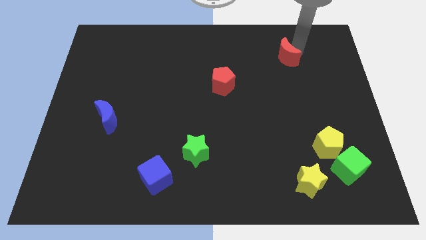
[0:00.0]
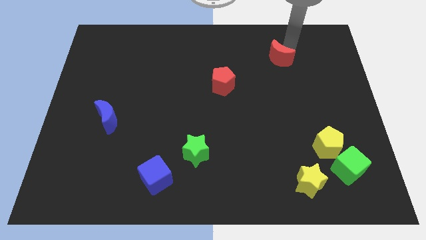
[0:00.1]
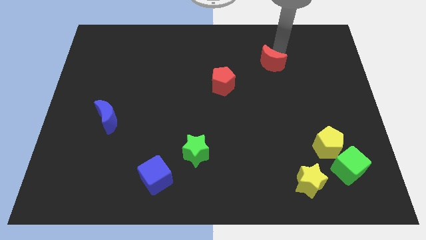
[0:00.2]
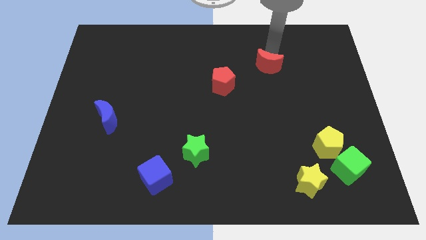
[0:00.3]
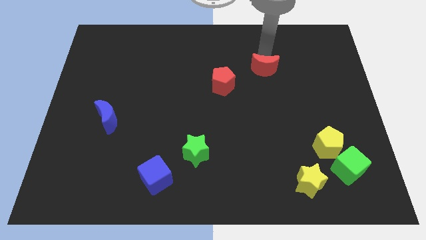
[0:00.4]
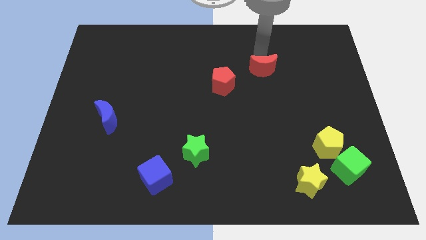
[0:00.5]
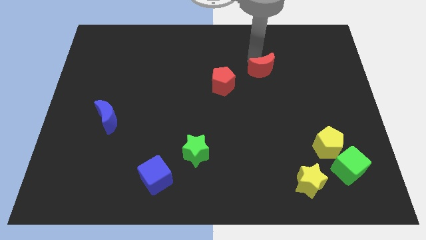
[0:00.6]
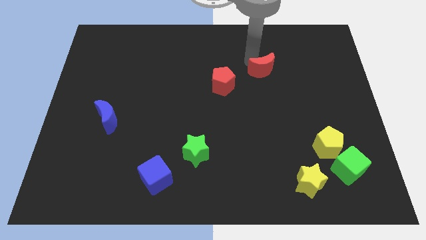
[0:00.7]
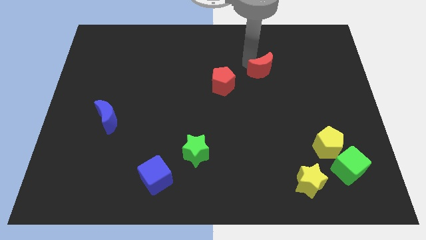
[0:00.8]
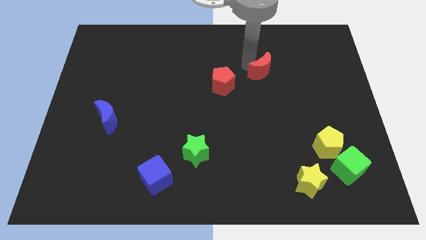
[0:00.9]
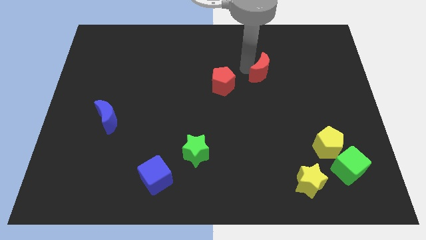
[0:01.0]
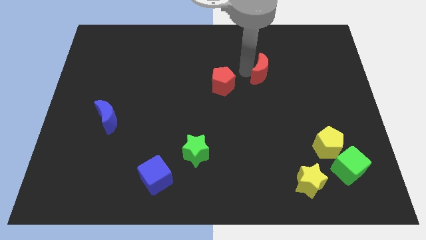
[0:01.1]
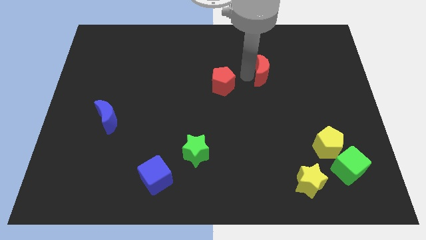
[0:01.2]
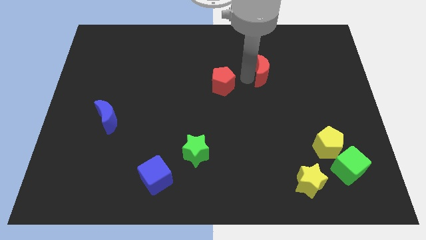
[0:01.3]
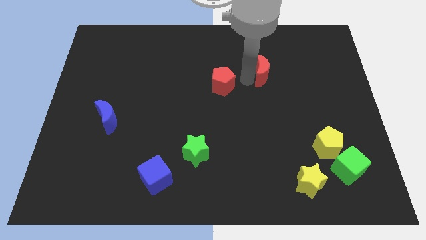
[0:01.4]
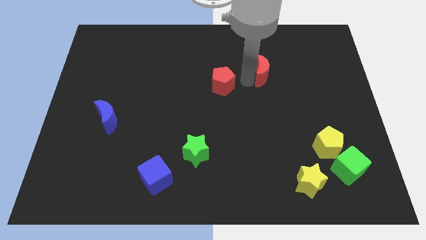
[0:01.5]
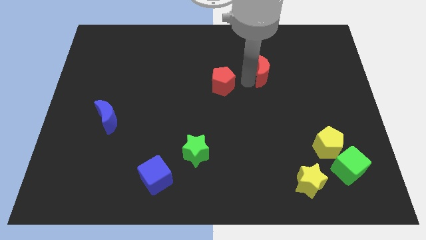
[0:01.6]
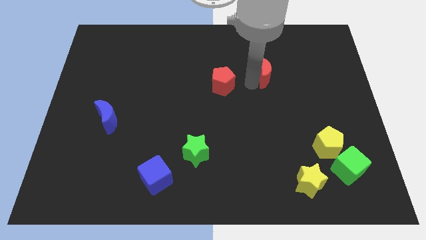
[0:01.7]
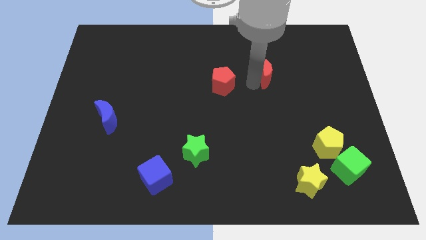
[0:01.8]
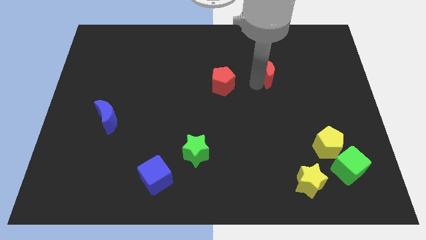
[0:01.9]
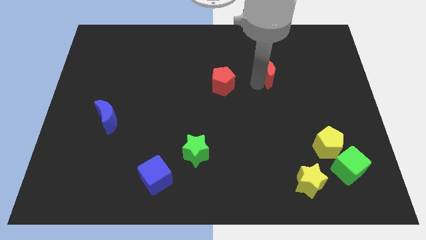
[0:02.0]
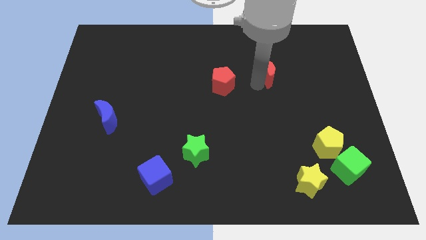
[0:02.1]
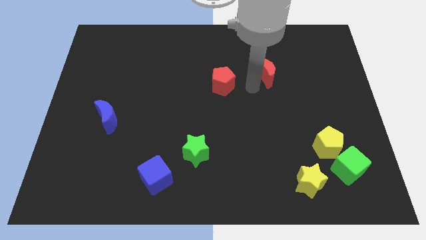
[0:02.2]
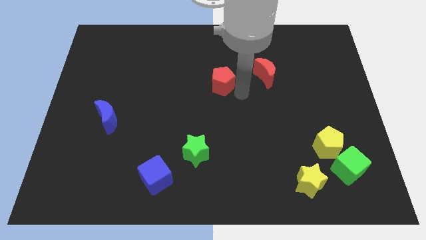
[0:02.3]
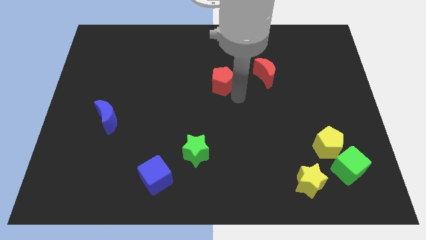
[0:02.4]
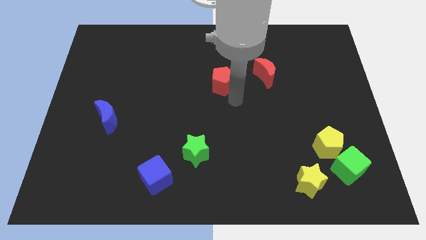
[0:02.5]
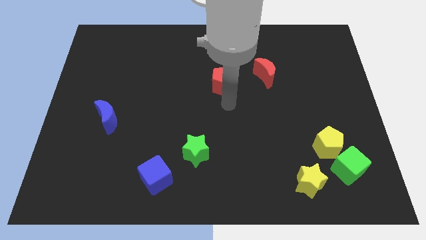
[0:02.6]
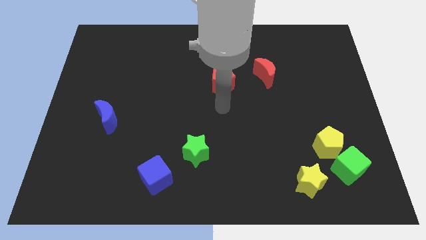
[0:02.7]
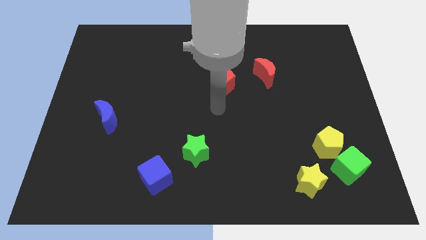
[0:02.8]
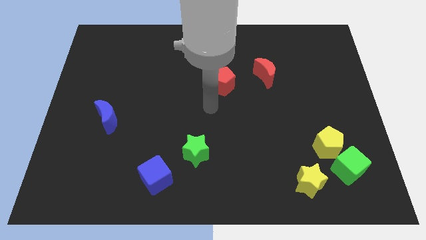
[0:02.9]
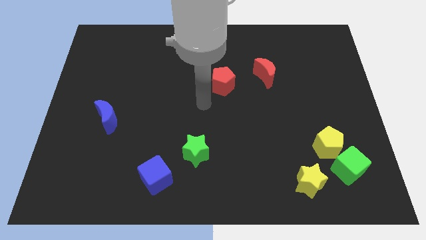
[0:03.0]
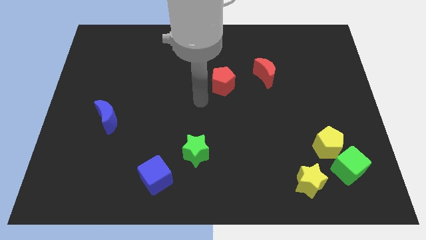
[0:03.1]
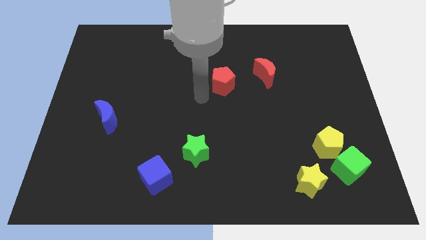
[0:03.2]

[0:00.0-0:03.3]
move the red crescent to the right side of the red pentagon

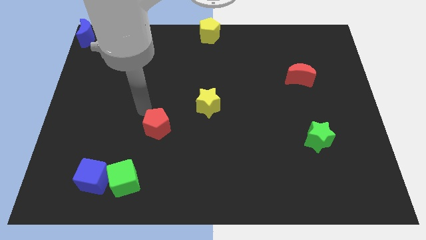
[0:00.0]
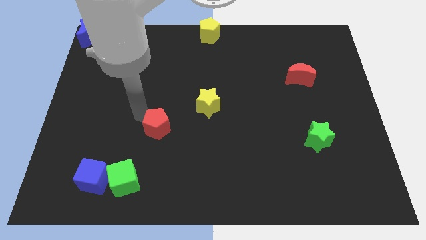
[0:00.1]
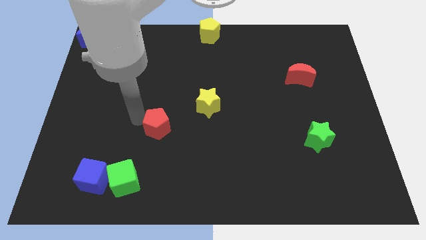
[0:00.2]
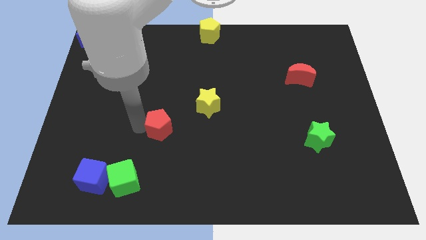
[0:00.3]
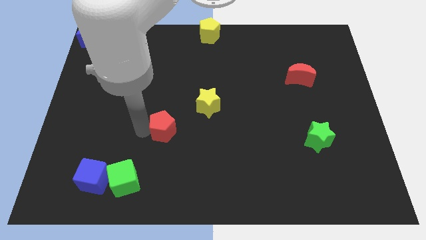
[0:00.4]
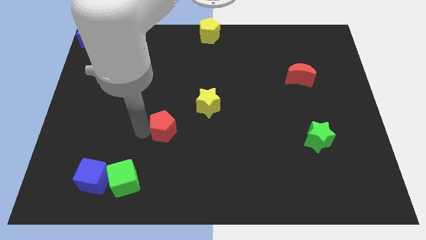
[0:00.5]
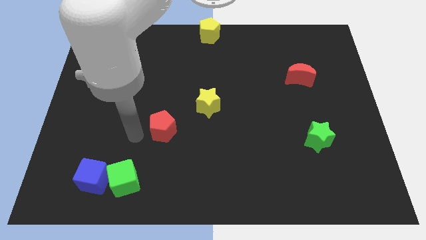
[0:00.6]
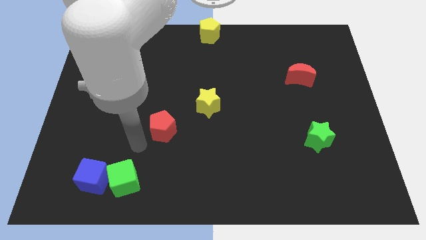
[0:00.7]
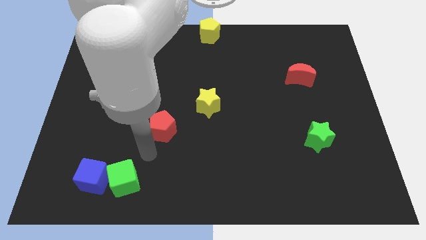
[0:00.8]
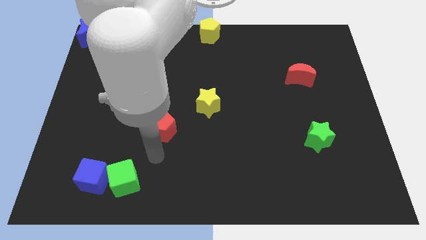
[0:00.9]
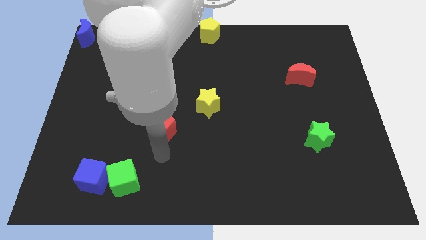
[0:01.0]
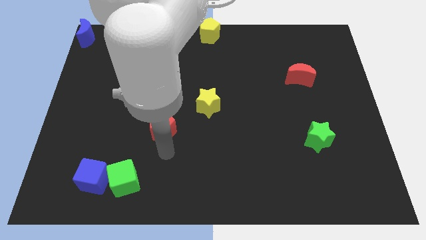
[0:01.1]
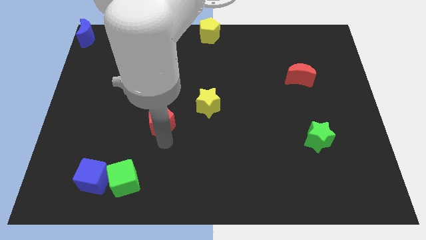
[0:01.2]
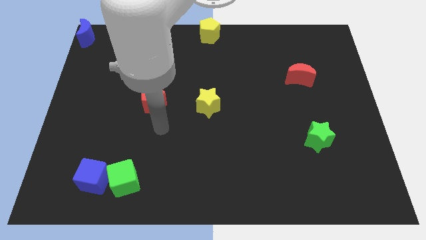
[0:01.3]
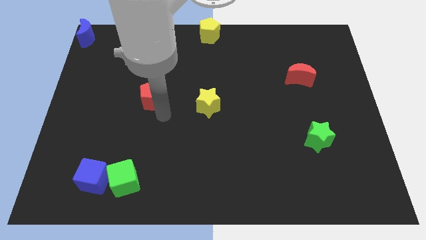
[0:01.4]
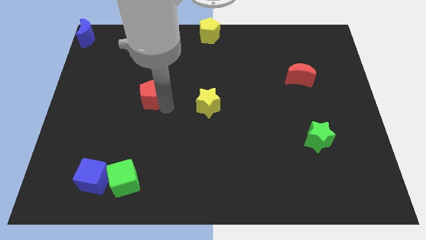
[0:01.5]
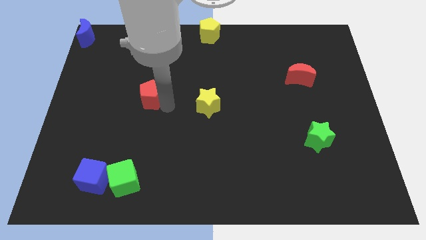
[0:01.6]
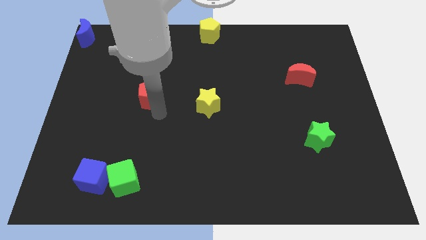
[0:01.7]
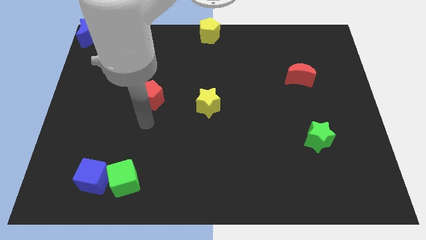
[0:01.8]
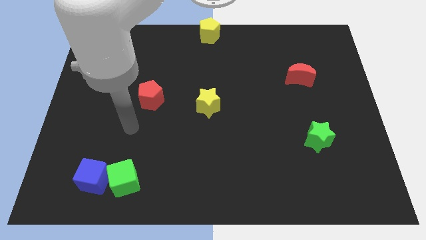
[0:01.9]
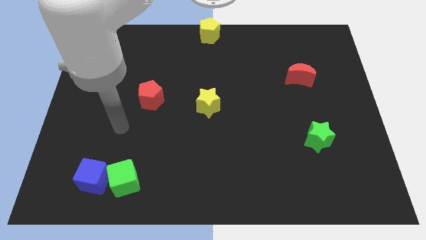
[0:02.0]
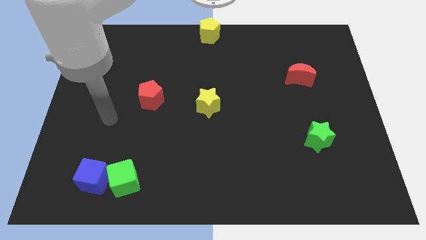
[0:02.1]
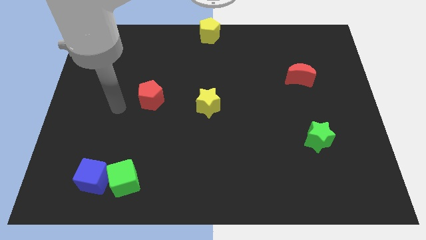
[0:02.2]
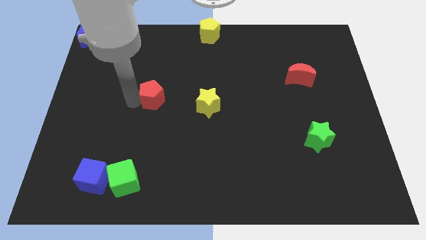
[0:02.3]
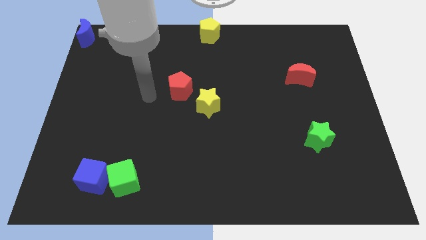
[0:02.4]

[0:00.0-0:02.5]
place the red pentagon towards the top side of the yellow star

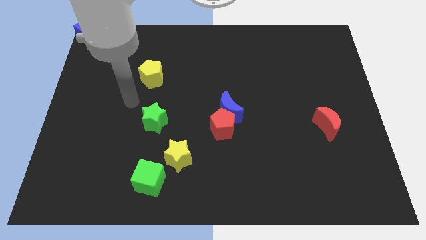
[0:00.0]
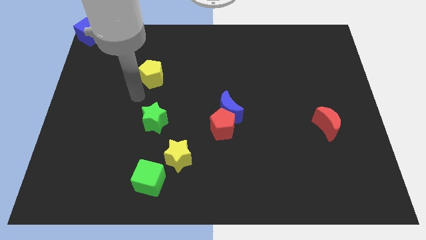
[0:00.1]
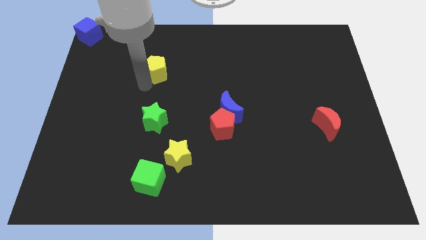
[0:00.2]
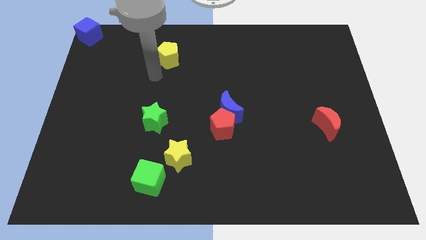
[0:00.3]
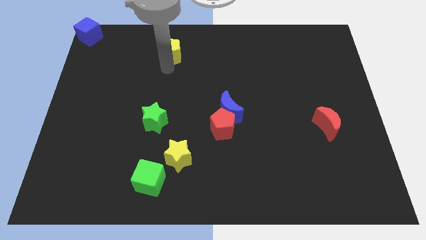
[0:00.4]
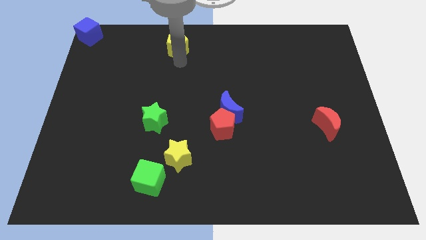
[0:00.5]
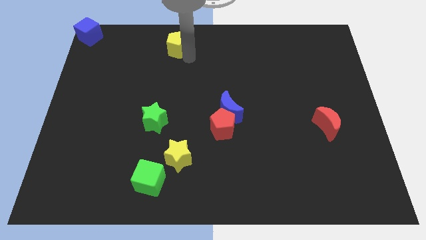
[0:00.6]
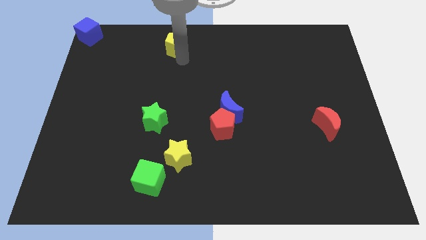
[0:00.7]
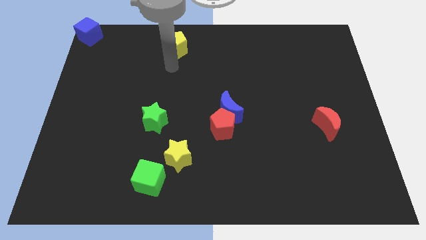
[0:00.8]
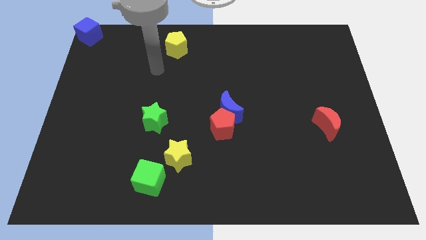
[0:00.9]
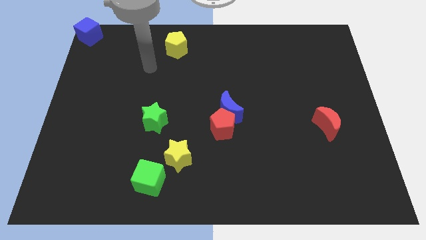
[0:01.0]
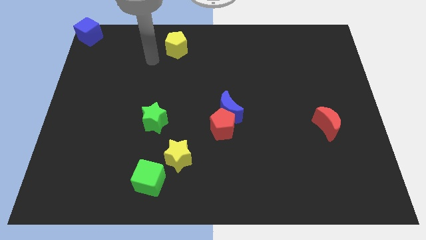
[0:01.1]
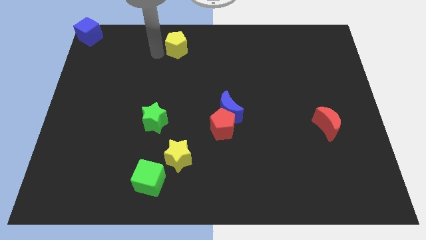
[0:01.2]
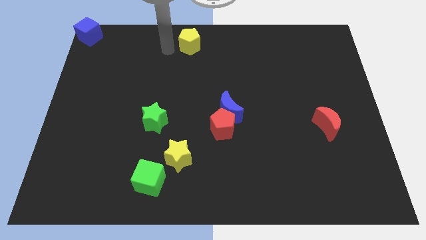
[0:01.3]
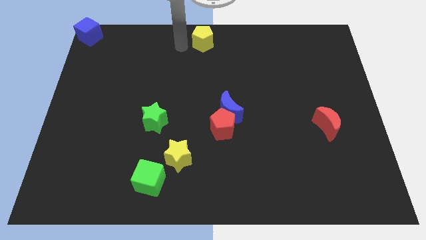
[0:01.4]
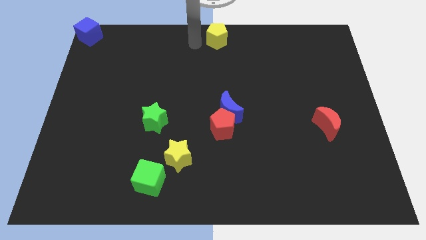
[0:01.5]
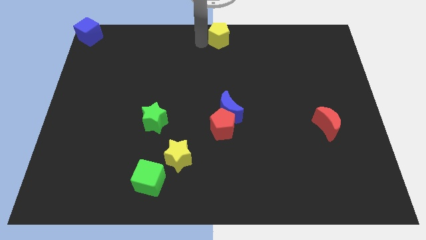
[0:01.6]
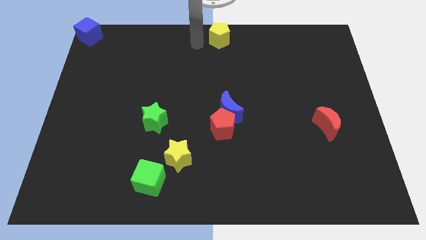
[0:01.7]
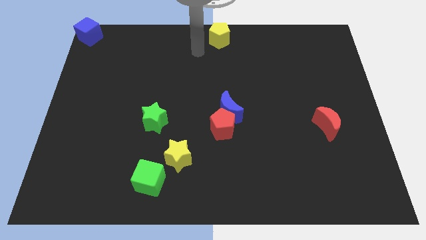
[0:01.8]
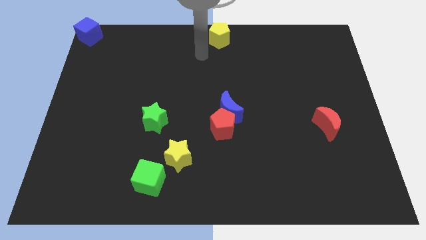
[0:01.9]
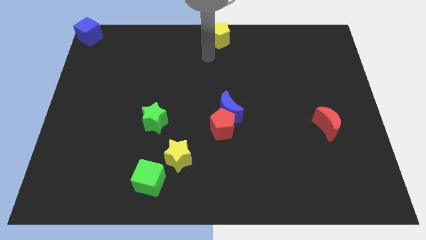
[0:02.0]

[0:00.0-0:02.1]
move yellow pentagon to the top center

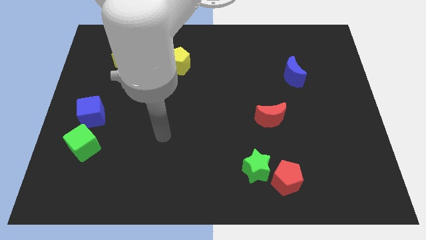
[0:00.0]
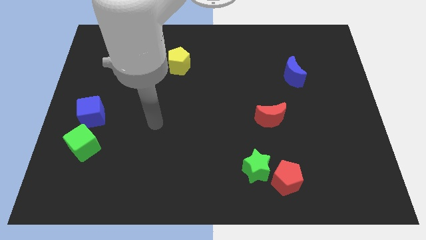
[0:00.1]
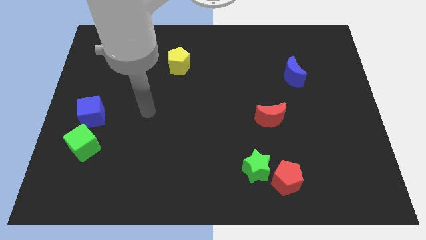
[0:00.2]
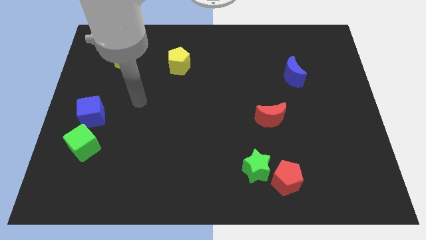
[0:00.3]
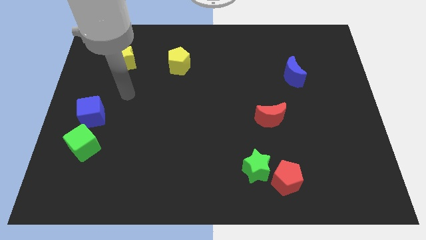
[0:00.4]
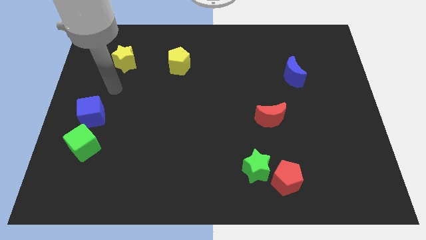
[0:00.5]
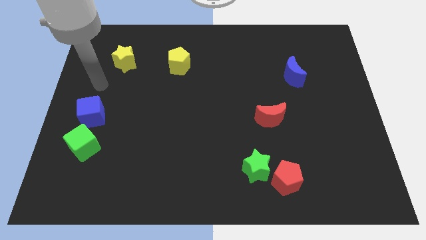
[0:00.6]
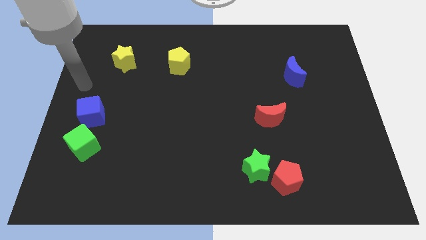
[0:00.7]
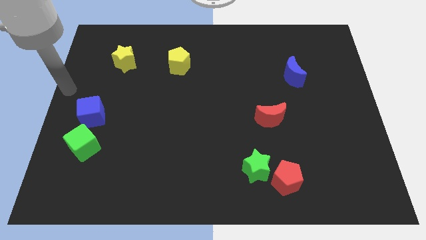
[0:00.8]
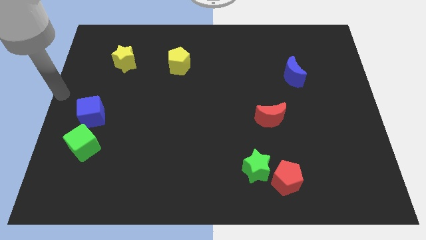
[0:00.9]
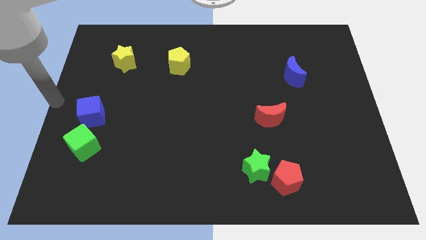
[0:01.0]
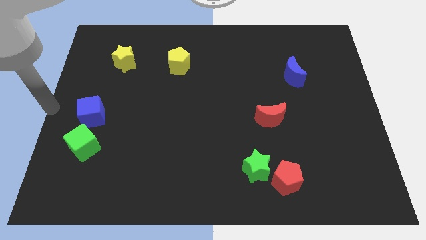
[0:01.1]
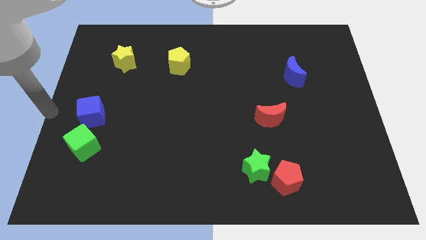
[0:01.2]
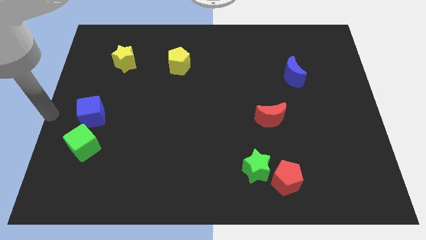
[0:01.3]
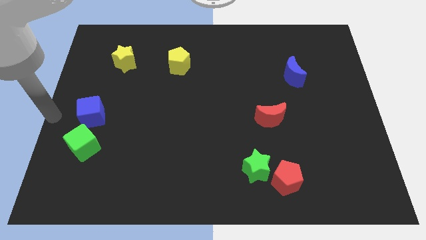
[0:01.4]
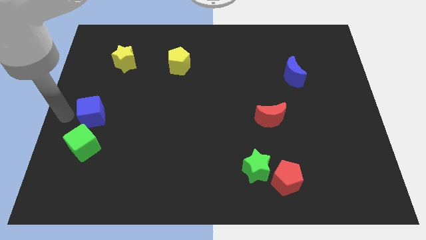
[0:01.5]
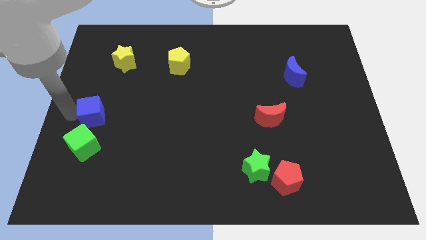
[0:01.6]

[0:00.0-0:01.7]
point the arm to the left of the blue cube
